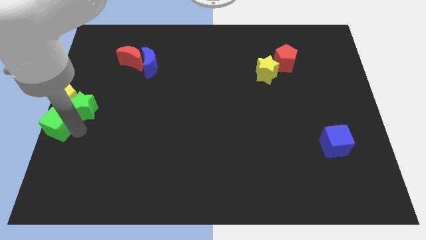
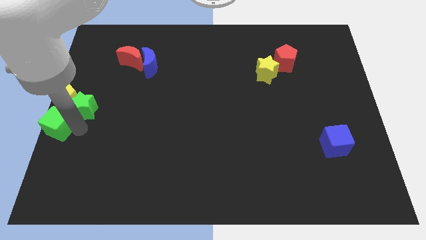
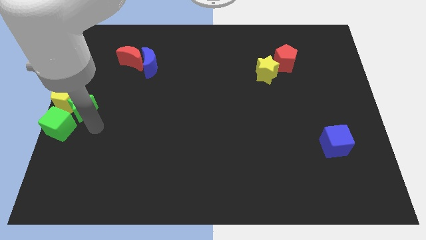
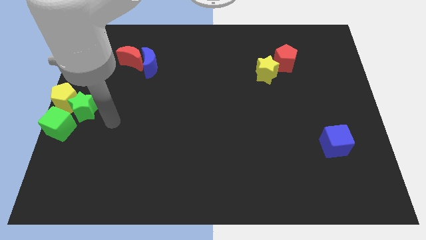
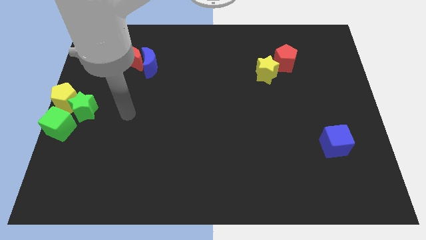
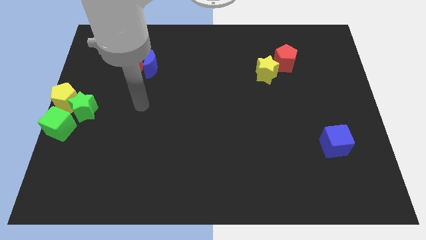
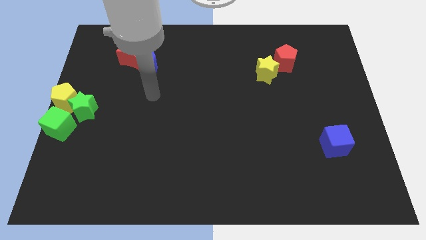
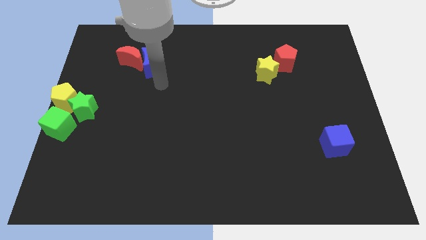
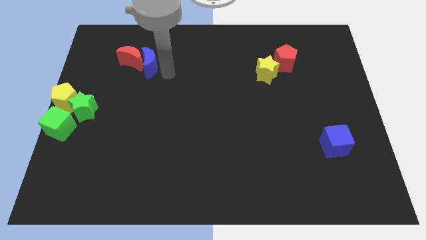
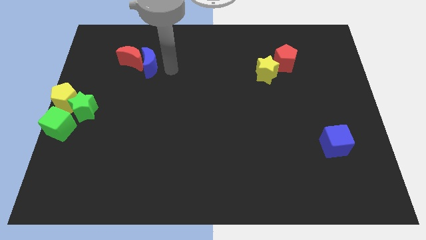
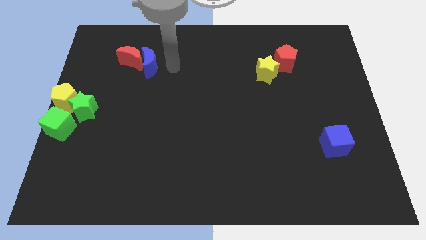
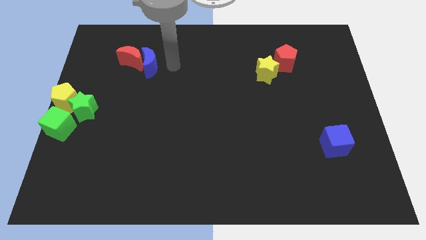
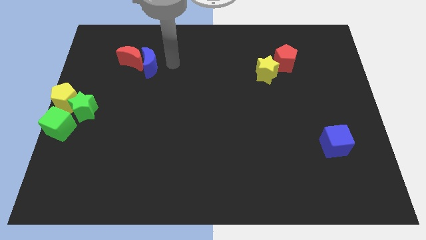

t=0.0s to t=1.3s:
drag your arm to the right of the blue moon

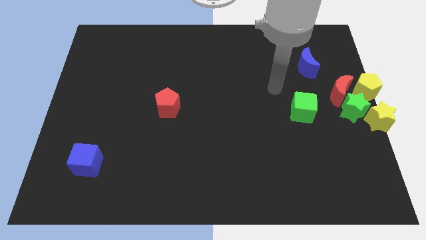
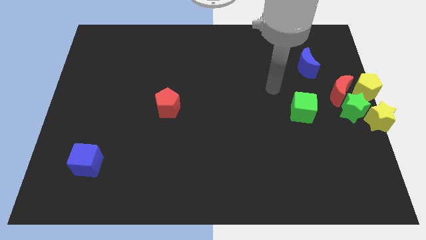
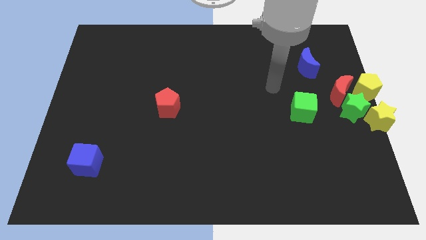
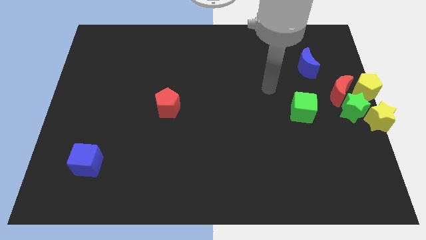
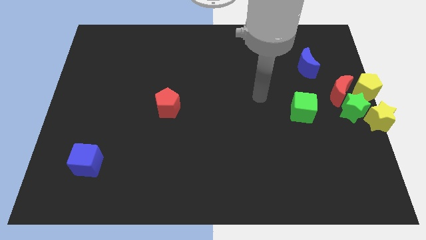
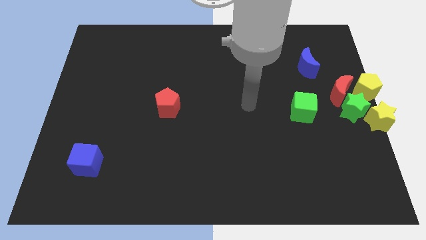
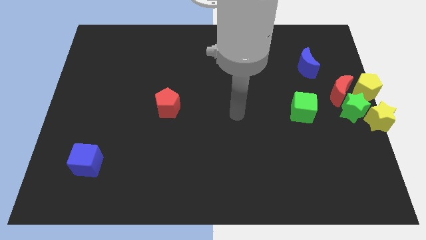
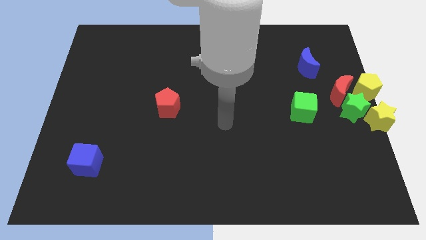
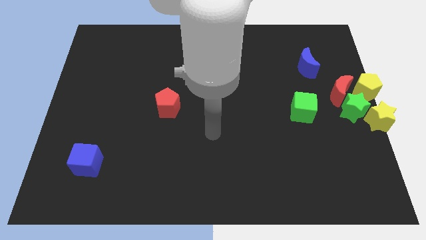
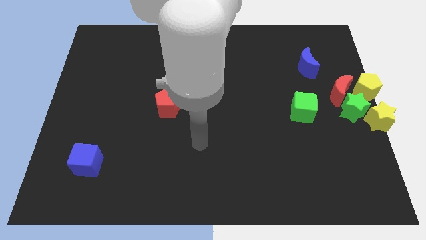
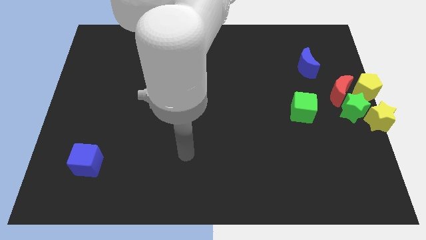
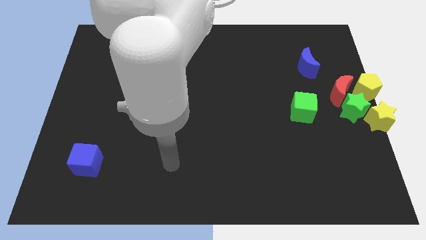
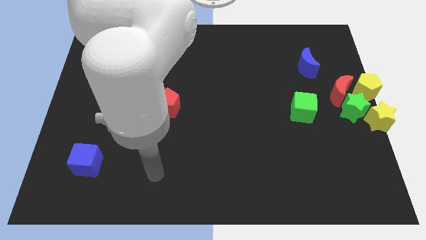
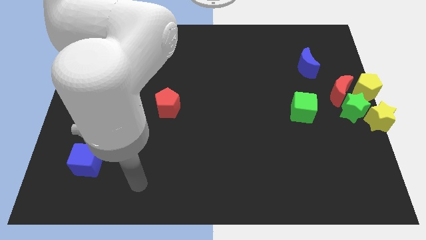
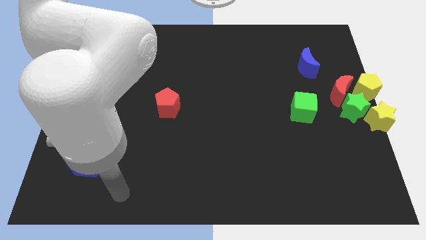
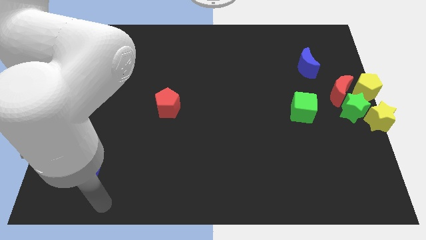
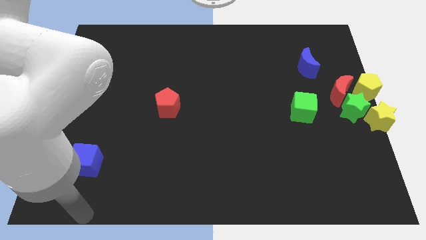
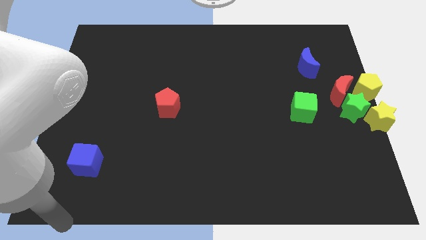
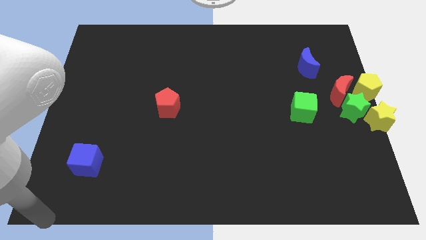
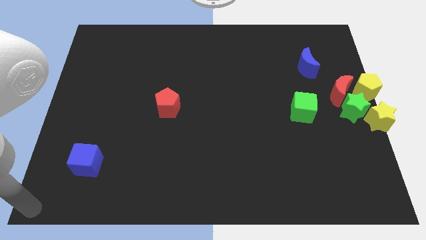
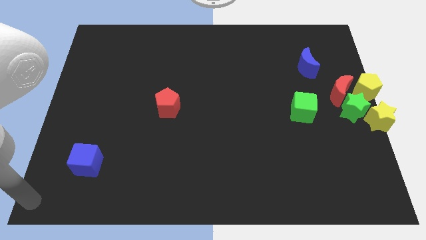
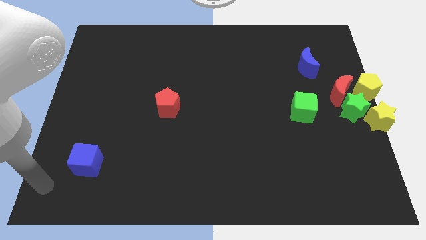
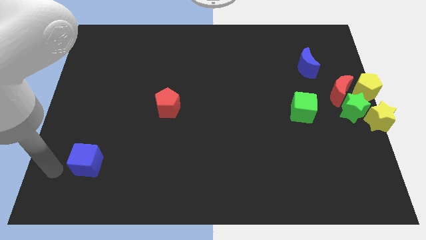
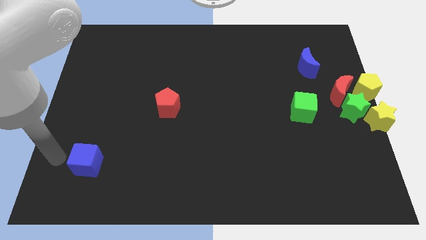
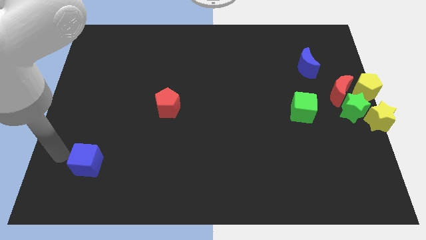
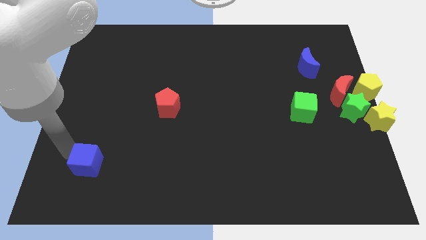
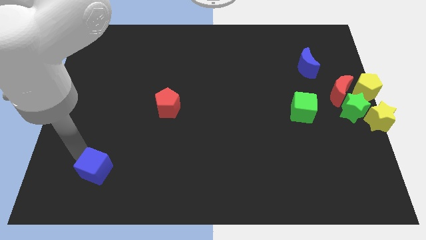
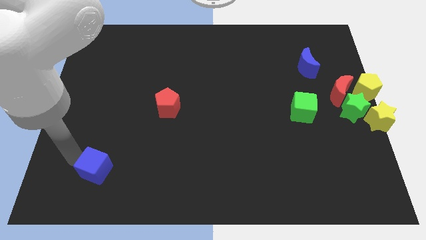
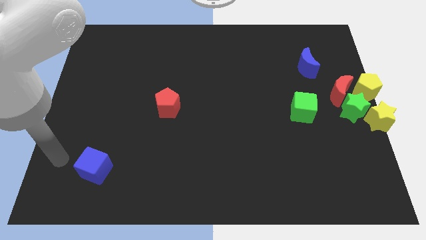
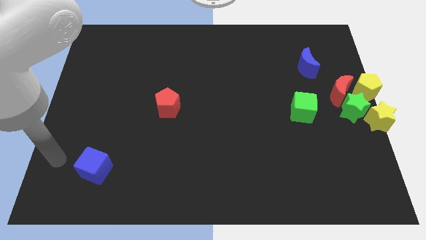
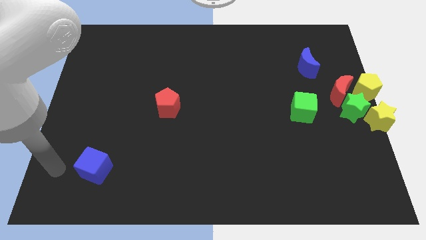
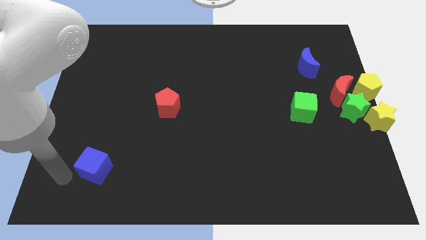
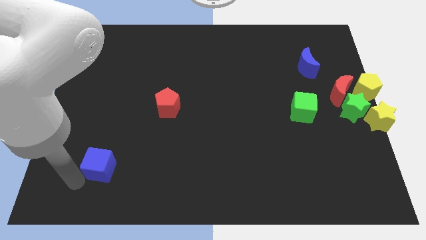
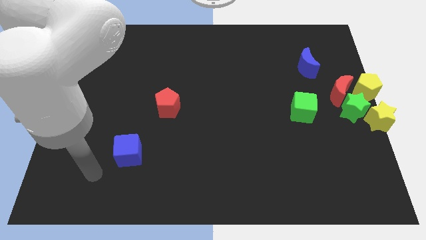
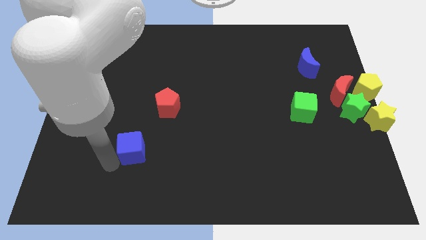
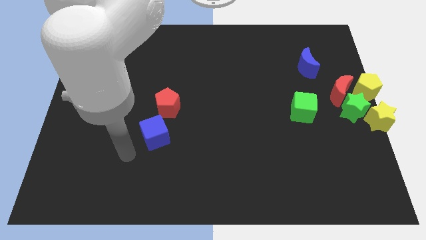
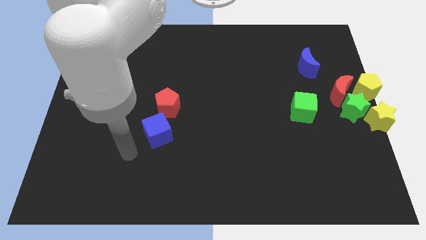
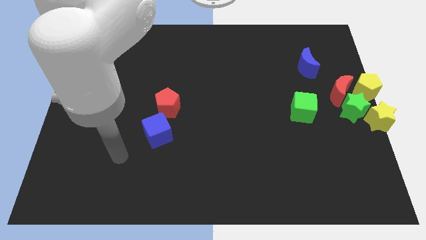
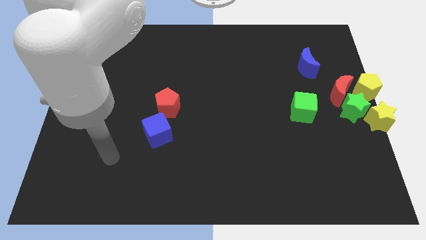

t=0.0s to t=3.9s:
push the blue cube towards the red pentagon

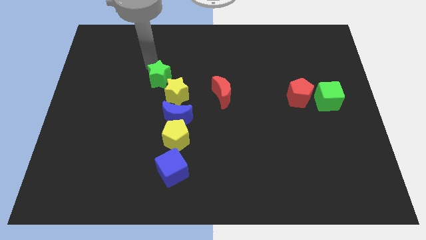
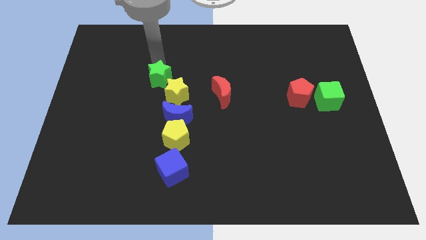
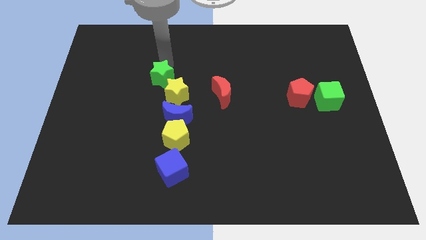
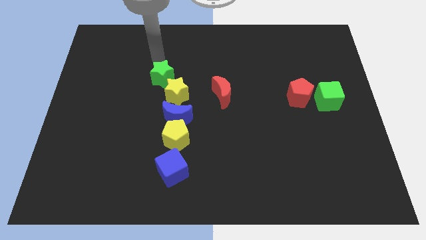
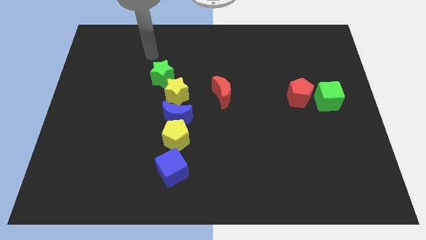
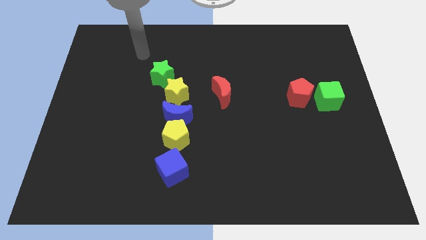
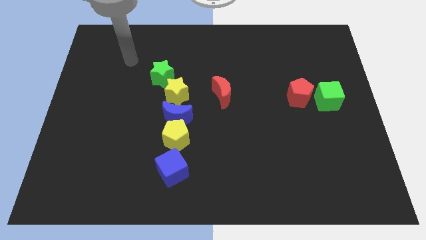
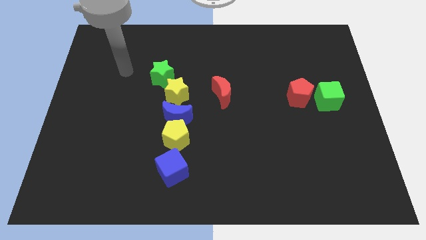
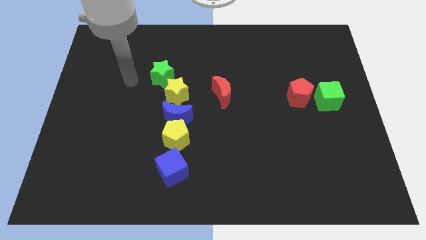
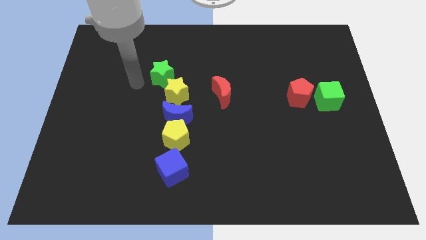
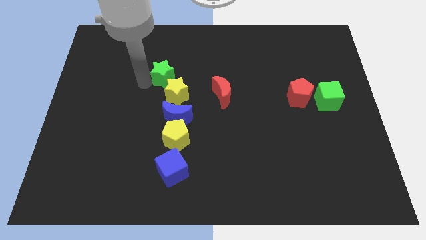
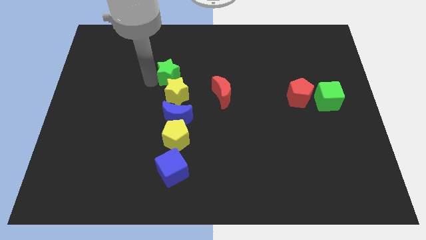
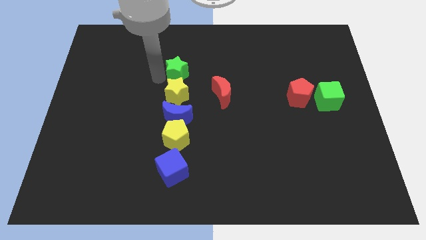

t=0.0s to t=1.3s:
place green star on the top of yellow star

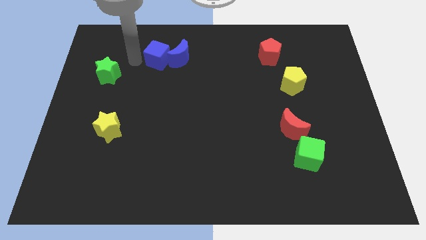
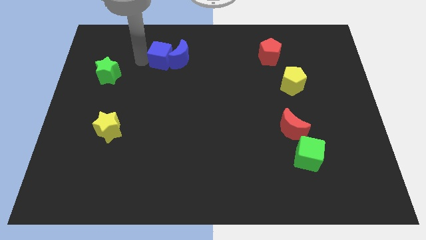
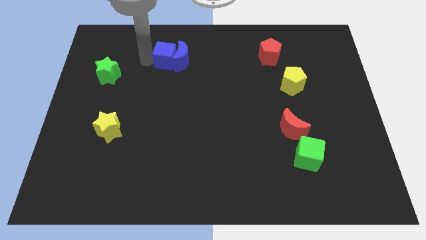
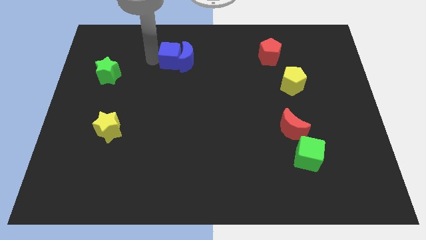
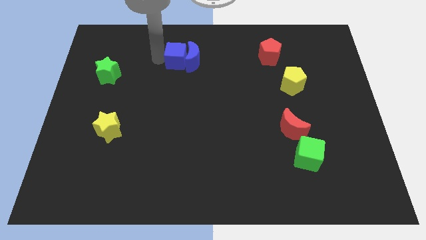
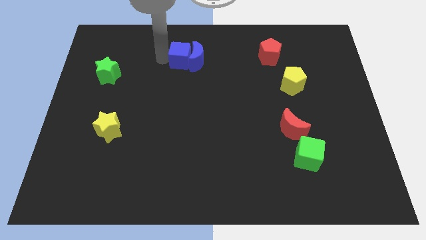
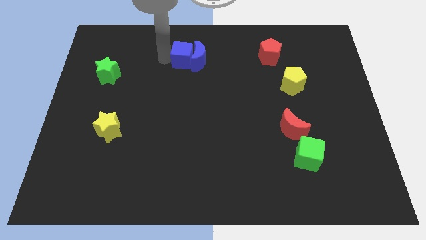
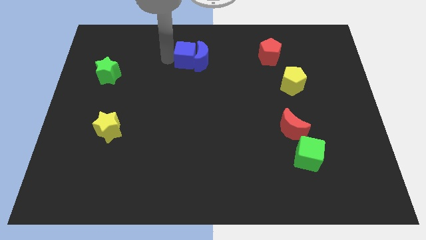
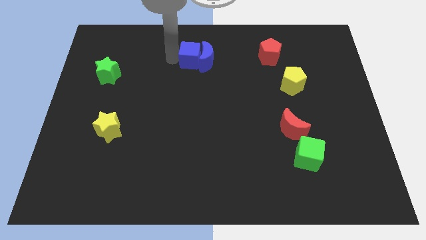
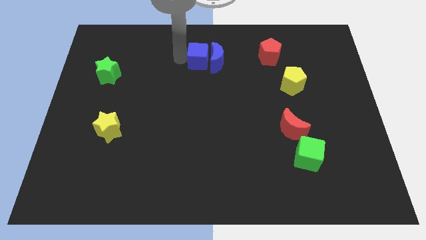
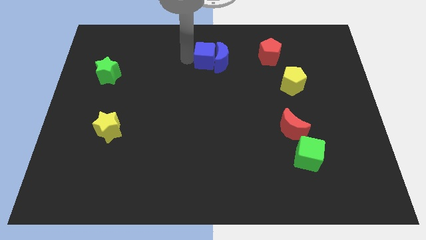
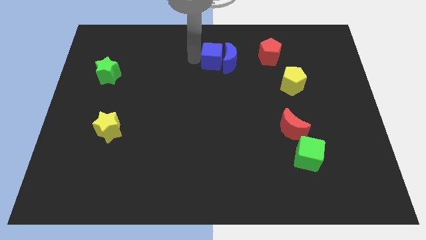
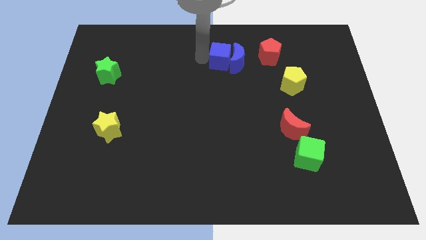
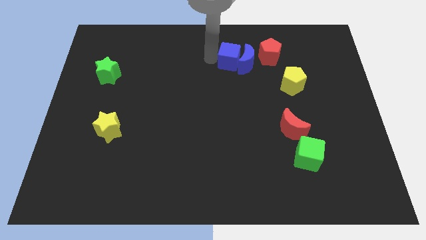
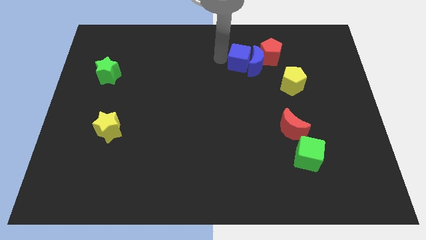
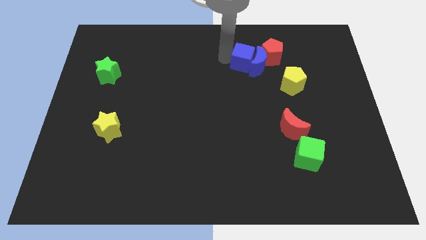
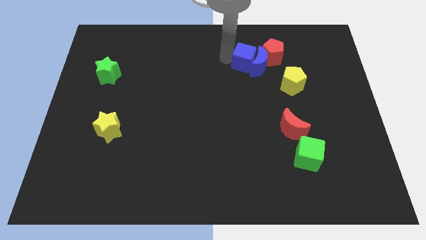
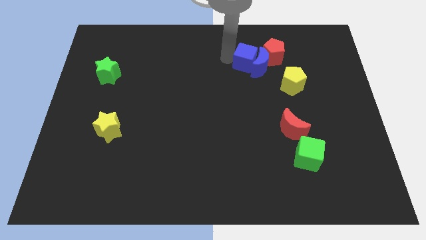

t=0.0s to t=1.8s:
push the blue cube into red pentagon

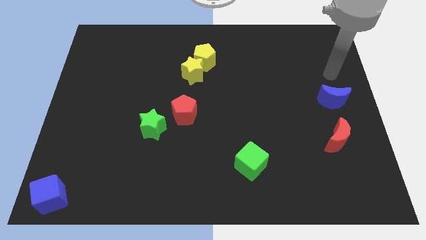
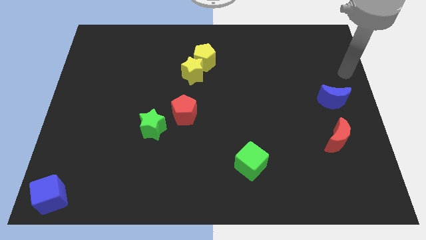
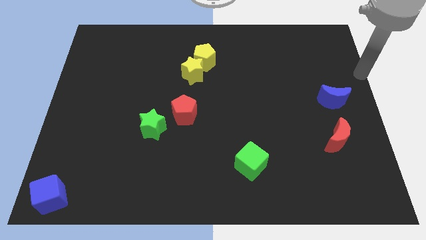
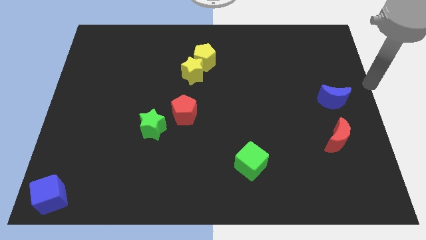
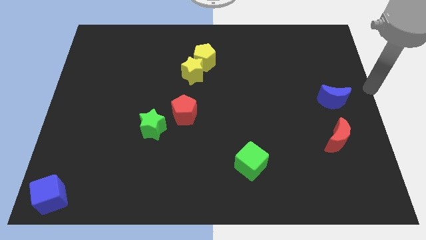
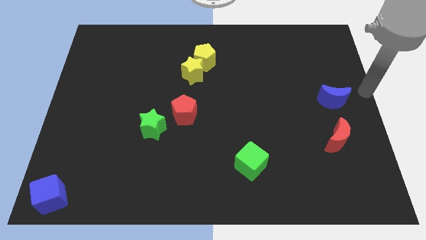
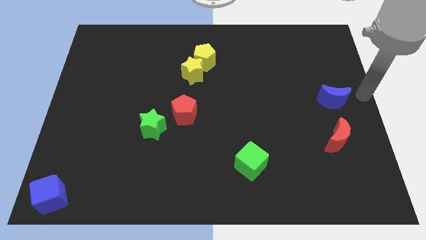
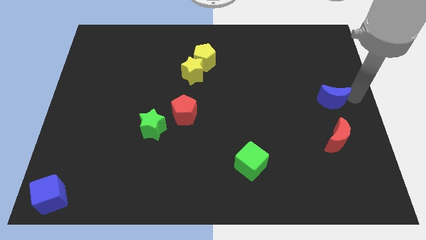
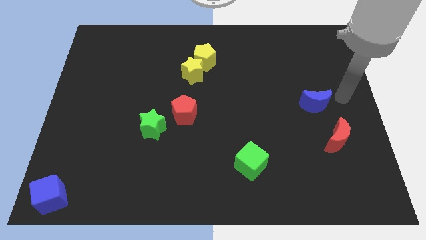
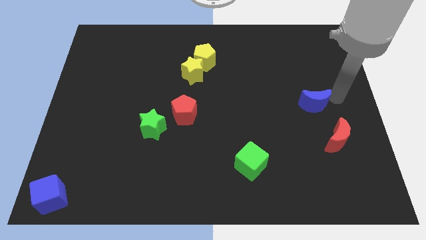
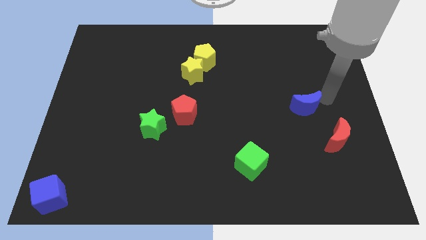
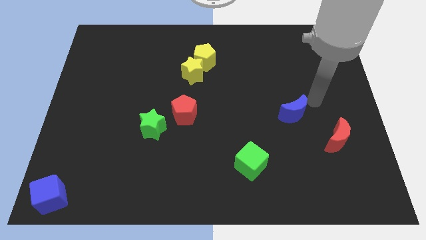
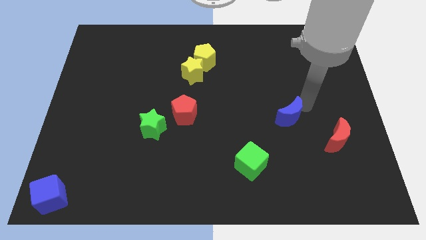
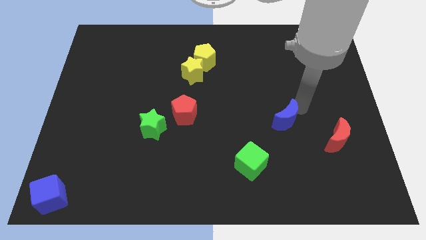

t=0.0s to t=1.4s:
place the blue moon parallel to red pentagon
